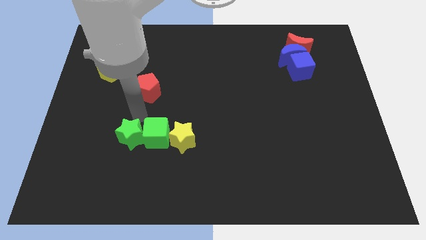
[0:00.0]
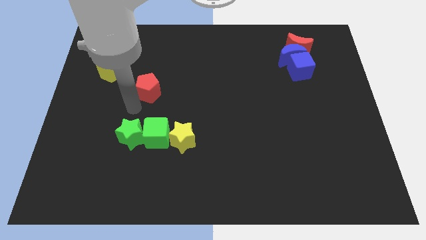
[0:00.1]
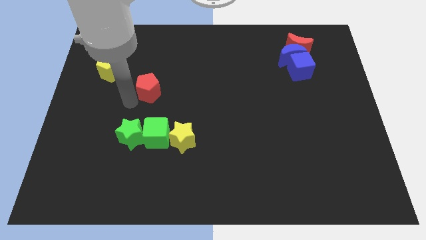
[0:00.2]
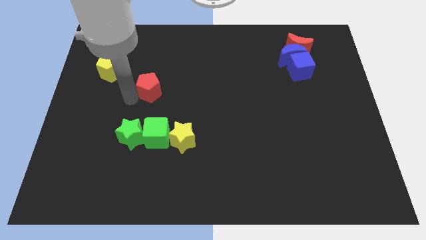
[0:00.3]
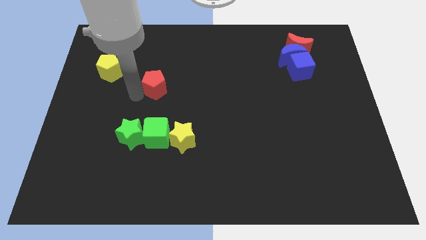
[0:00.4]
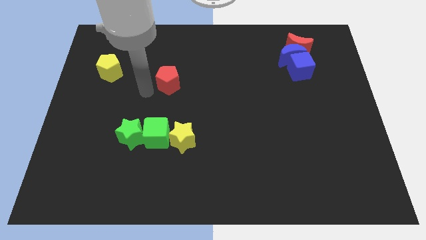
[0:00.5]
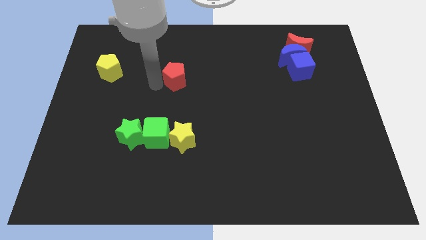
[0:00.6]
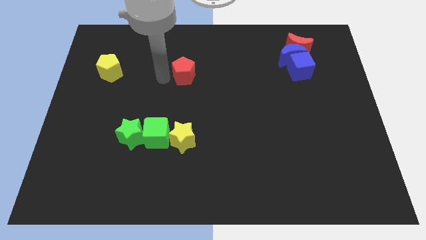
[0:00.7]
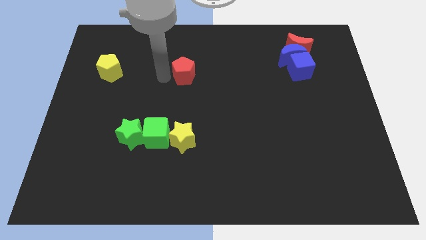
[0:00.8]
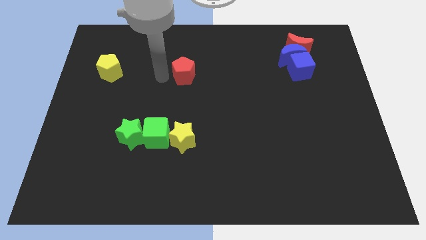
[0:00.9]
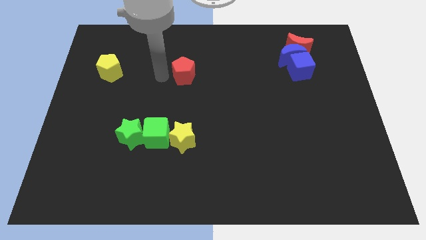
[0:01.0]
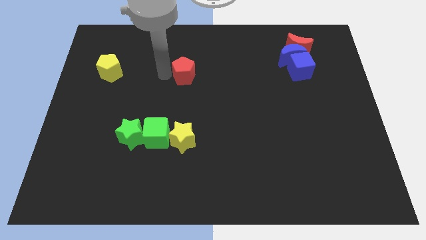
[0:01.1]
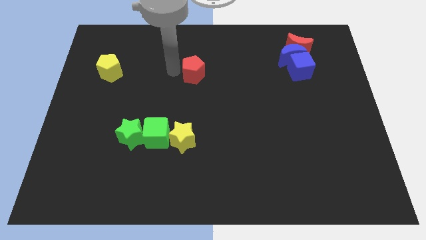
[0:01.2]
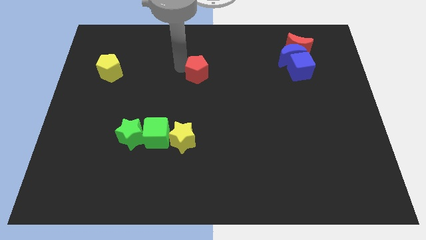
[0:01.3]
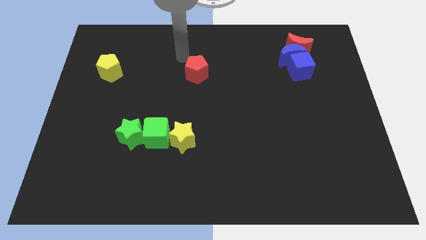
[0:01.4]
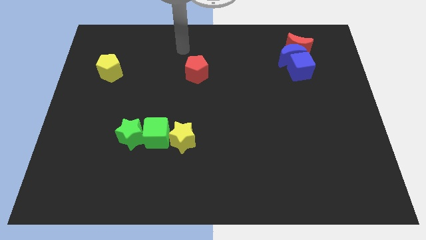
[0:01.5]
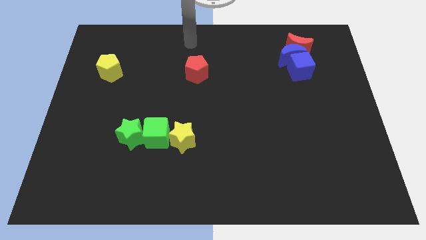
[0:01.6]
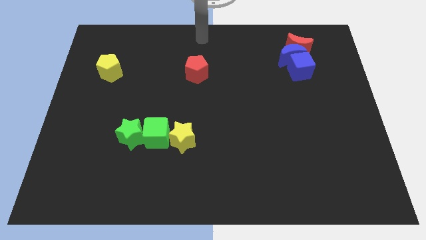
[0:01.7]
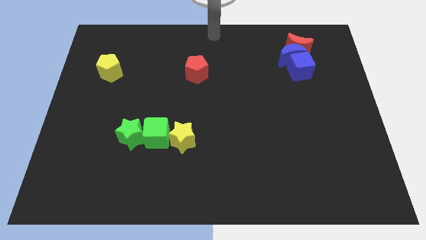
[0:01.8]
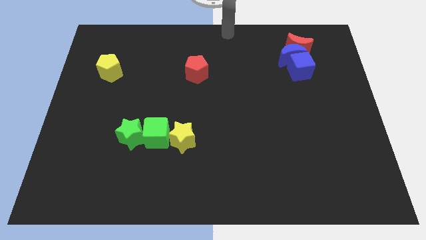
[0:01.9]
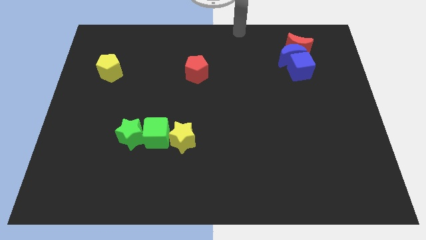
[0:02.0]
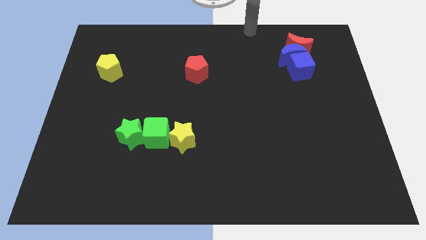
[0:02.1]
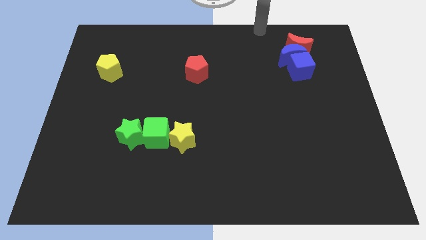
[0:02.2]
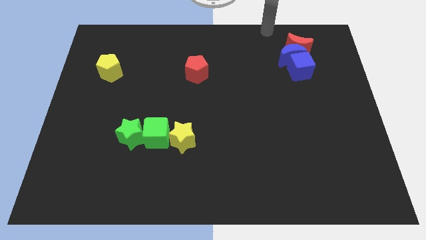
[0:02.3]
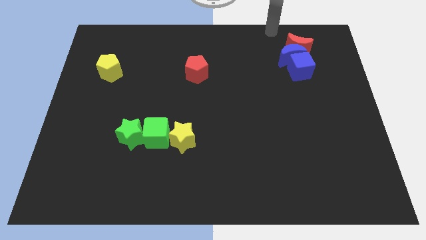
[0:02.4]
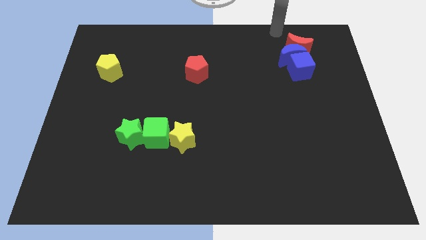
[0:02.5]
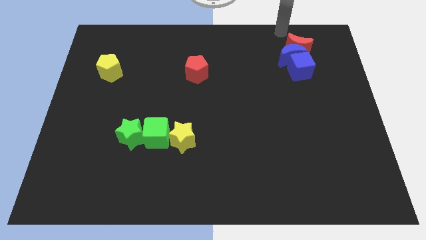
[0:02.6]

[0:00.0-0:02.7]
put the red pentagon in between the yellow pentagon and the blue cube

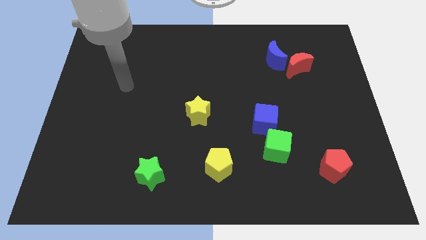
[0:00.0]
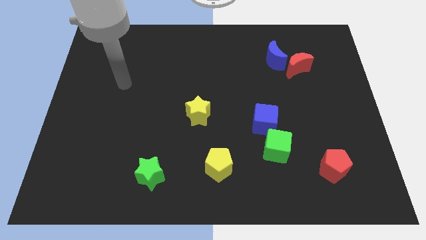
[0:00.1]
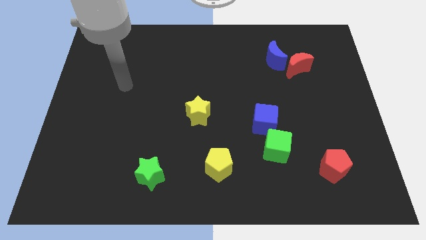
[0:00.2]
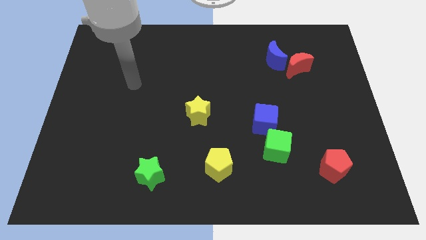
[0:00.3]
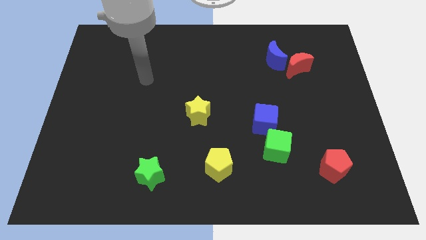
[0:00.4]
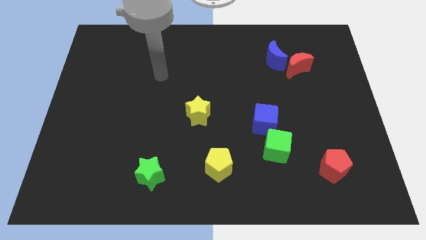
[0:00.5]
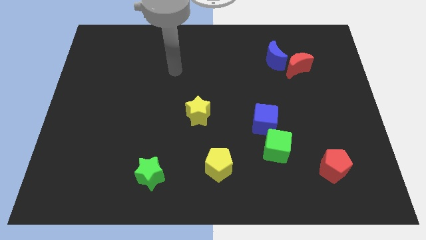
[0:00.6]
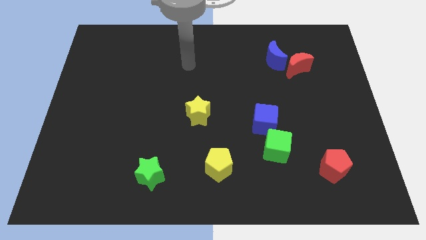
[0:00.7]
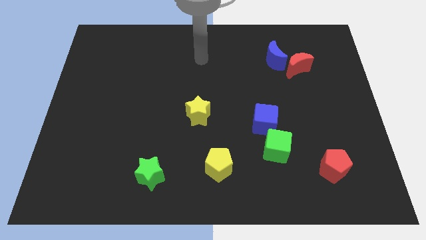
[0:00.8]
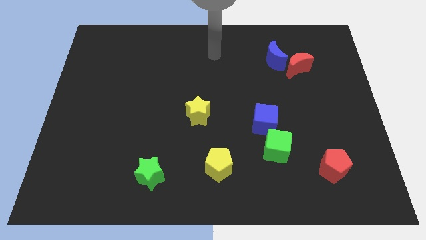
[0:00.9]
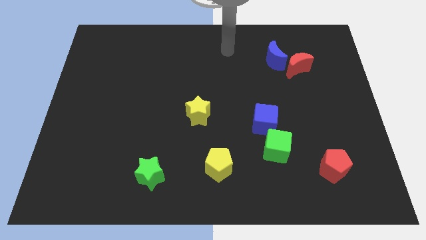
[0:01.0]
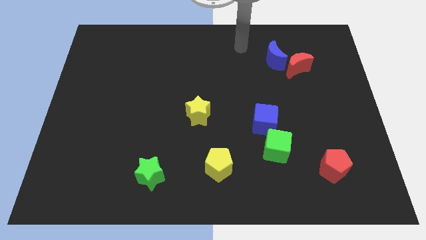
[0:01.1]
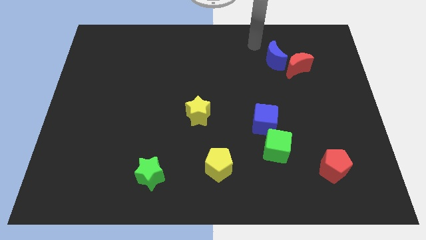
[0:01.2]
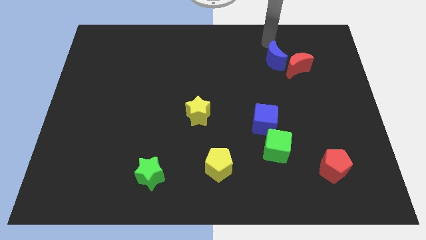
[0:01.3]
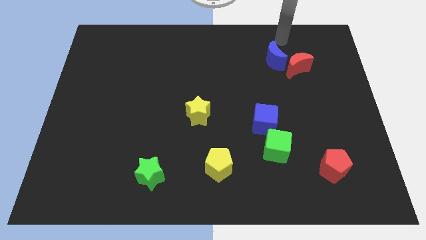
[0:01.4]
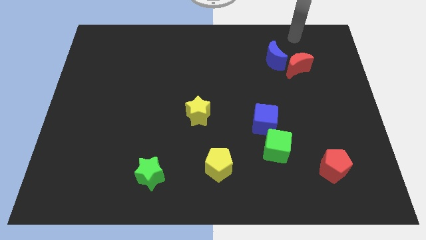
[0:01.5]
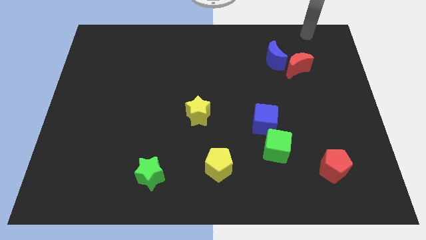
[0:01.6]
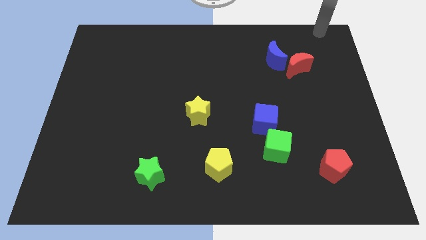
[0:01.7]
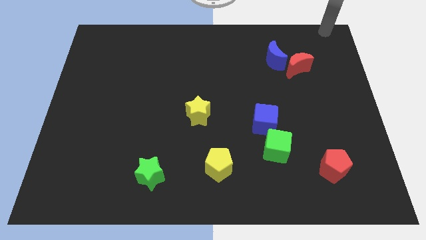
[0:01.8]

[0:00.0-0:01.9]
move the arm to the top right corner

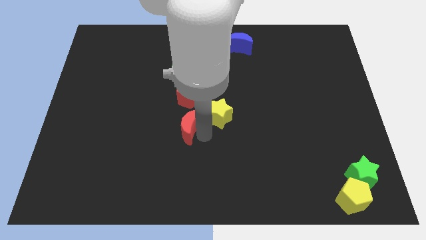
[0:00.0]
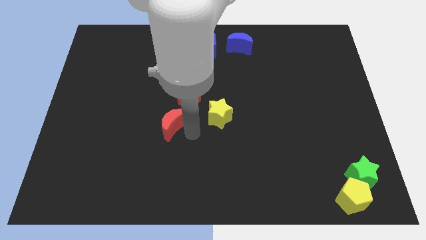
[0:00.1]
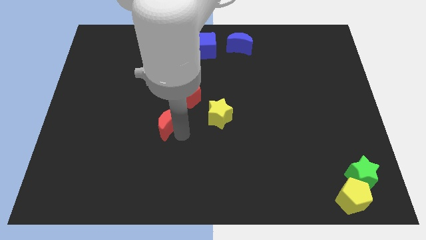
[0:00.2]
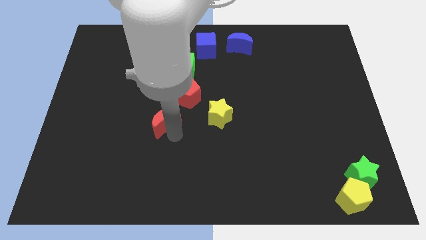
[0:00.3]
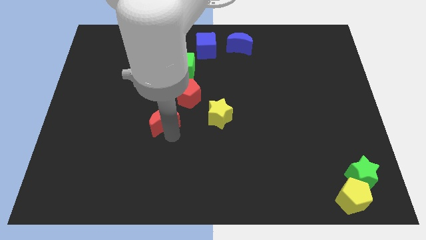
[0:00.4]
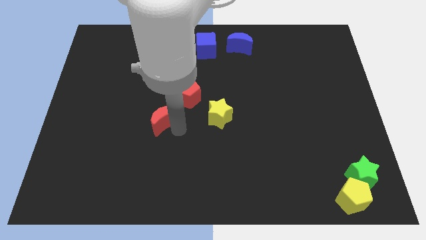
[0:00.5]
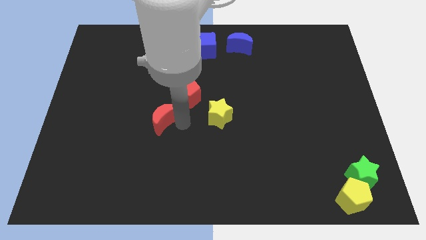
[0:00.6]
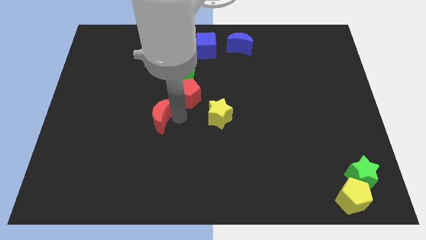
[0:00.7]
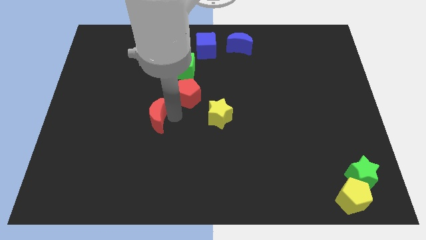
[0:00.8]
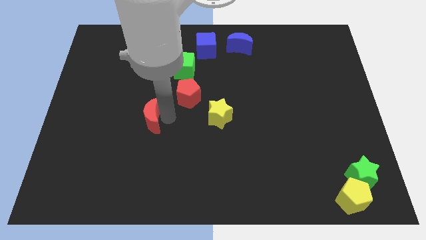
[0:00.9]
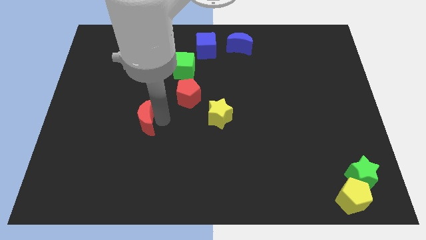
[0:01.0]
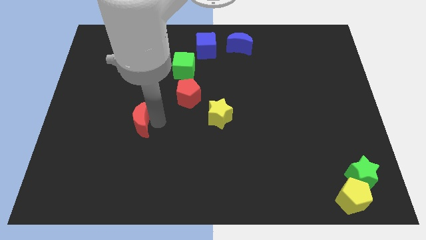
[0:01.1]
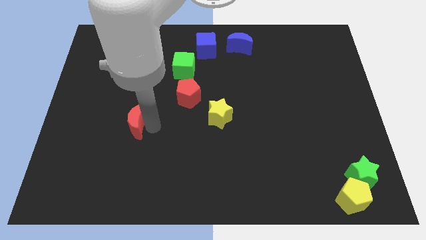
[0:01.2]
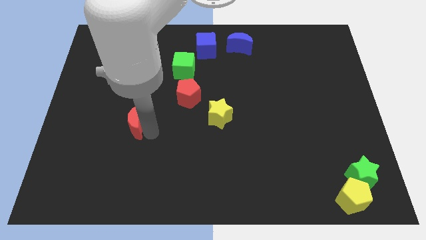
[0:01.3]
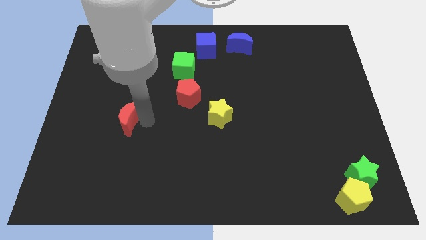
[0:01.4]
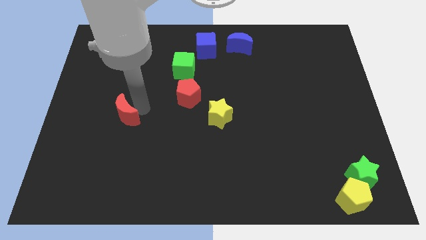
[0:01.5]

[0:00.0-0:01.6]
separate red moon from the yellow star

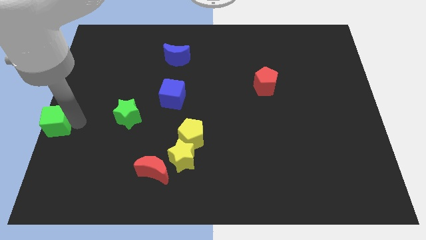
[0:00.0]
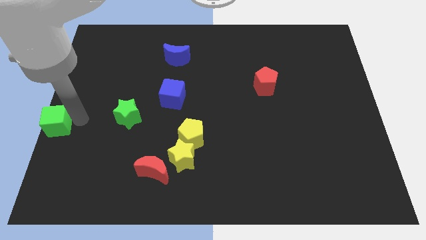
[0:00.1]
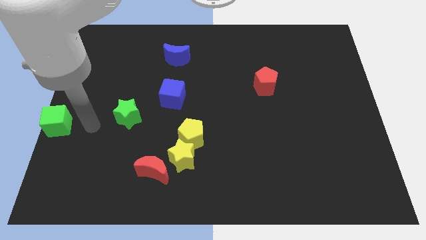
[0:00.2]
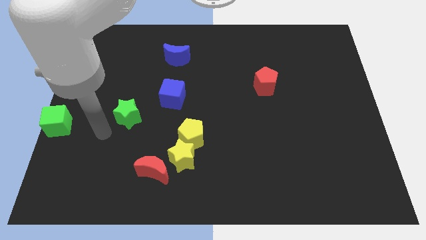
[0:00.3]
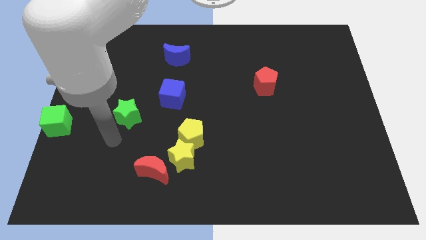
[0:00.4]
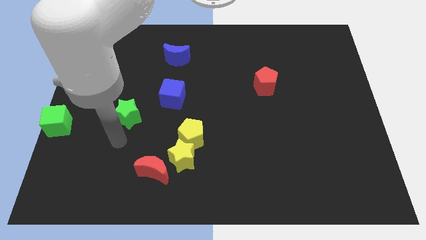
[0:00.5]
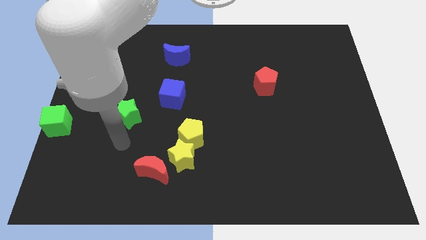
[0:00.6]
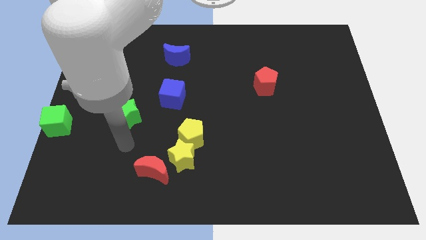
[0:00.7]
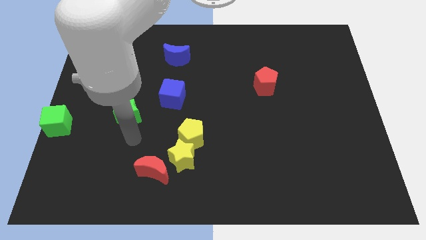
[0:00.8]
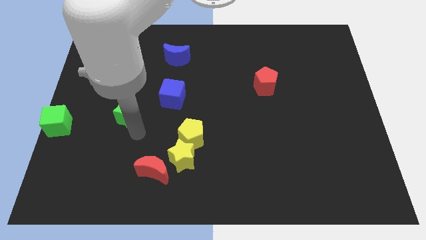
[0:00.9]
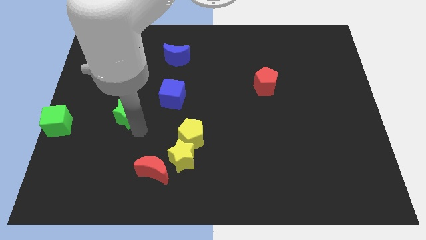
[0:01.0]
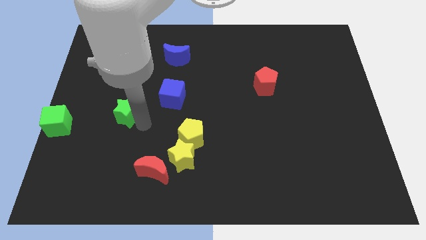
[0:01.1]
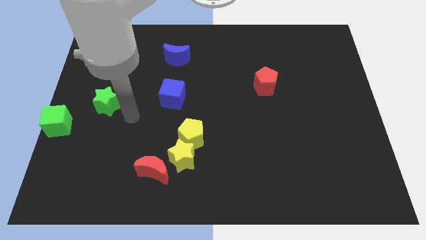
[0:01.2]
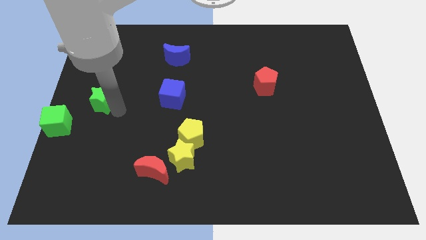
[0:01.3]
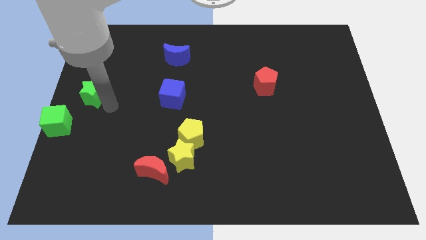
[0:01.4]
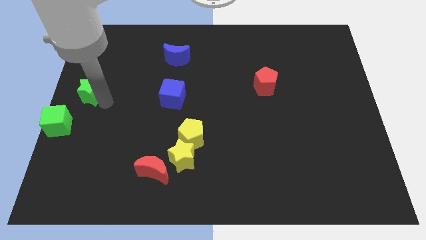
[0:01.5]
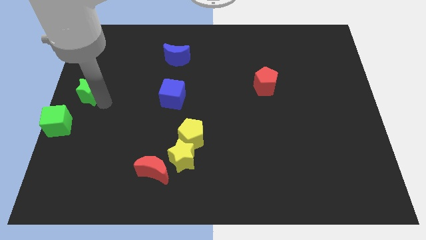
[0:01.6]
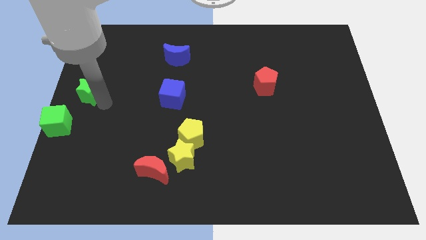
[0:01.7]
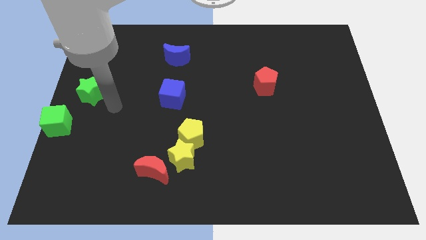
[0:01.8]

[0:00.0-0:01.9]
push the green star diagonally above the top right side of the green cube

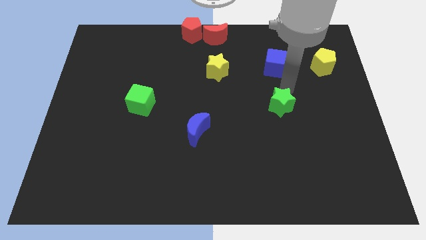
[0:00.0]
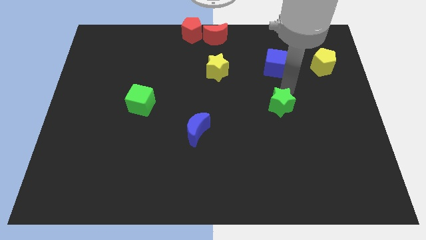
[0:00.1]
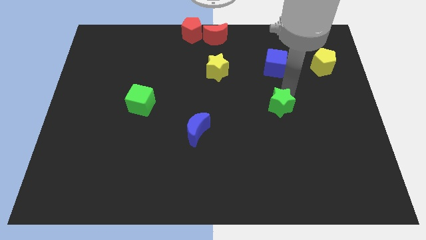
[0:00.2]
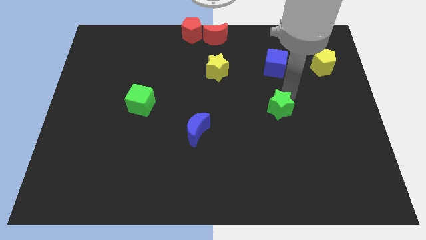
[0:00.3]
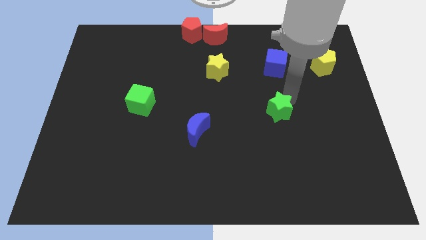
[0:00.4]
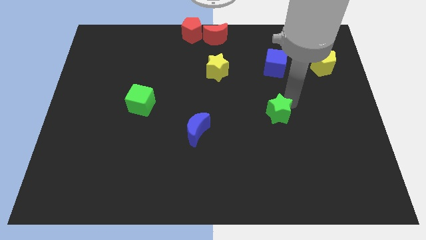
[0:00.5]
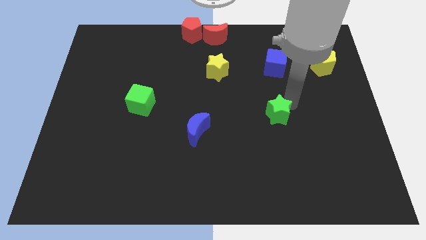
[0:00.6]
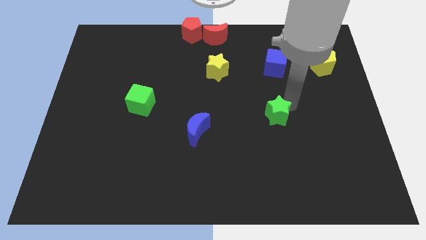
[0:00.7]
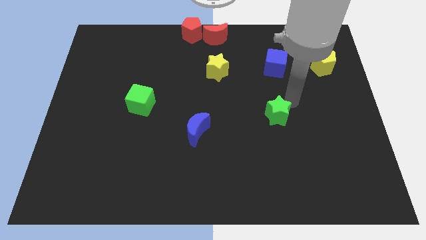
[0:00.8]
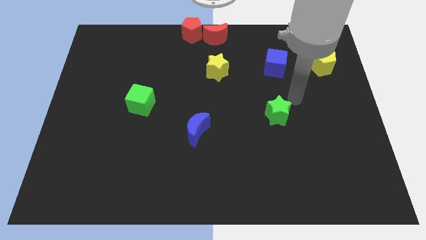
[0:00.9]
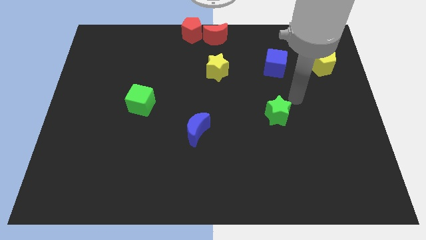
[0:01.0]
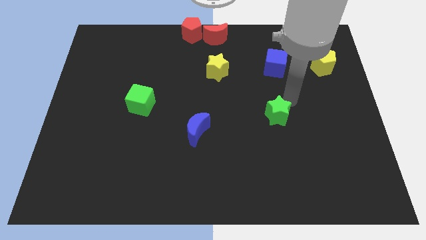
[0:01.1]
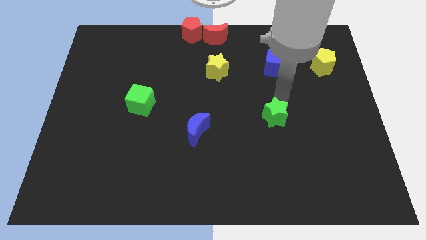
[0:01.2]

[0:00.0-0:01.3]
push the green star towards the bottom of the board
